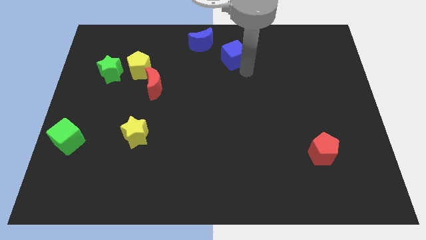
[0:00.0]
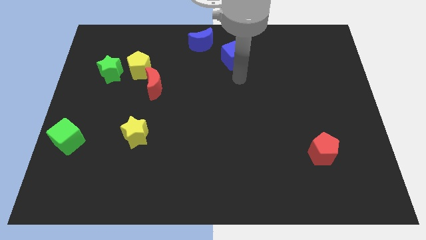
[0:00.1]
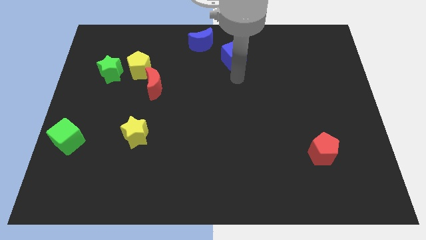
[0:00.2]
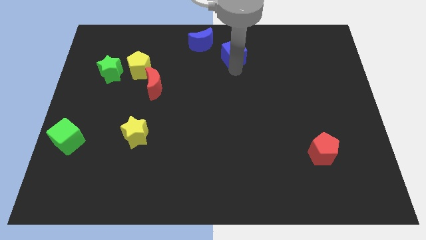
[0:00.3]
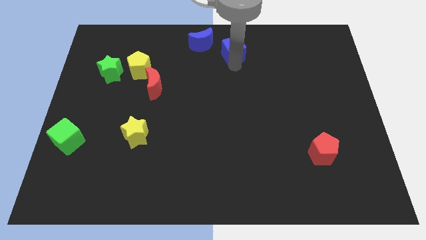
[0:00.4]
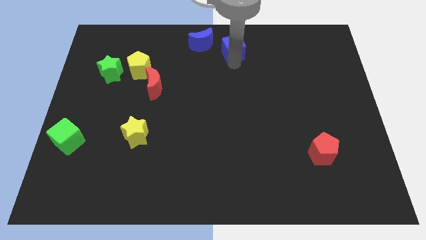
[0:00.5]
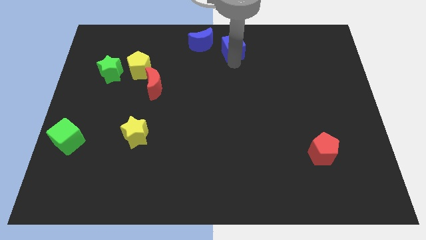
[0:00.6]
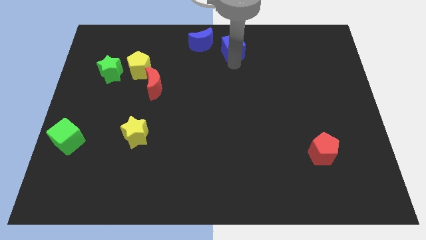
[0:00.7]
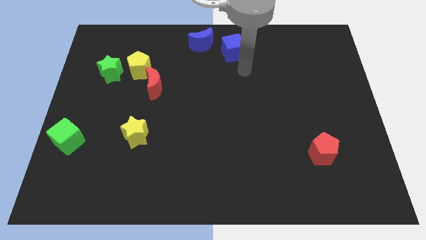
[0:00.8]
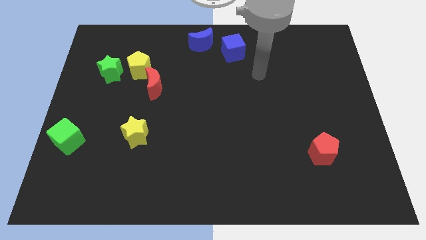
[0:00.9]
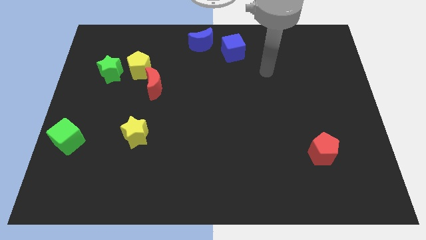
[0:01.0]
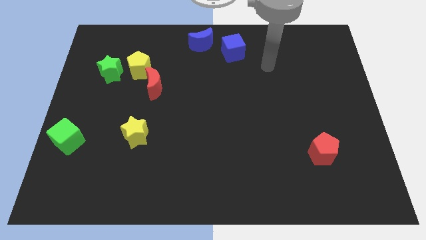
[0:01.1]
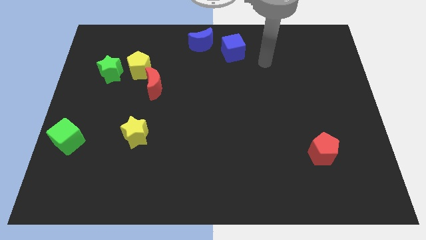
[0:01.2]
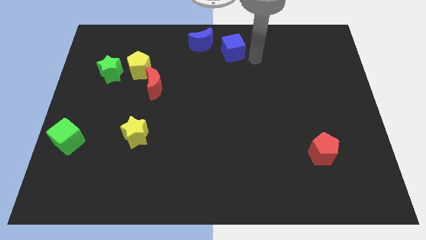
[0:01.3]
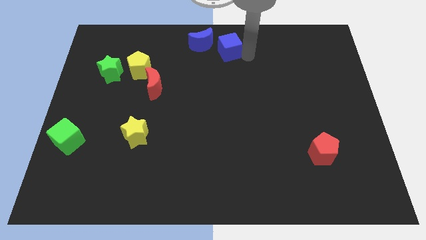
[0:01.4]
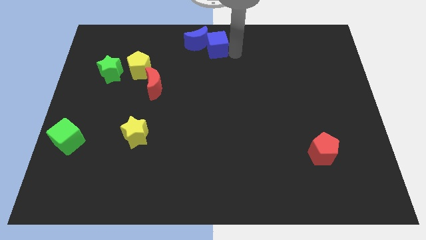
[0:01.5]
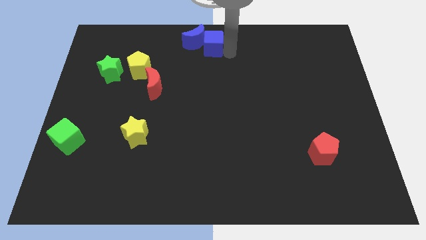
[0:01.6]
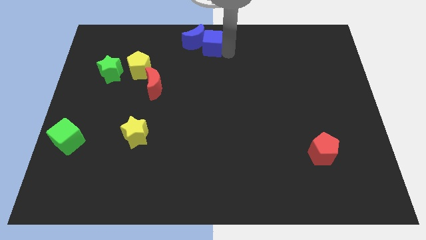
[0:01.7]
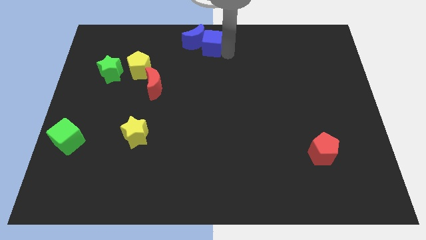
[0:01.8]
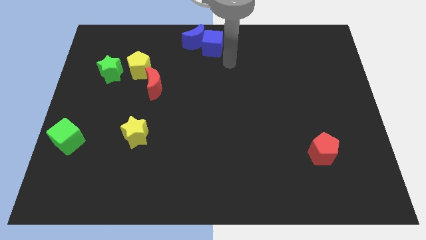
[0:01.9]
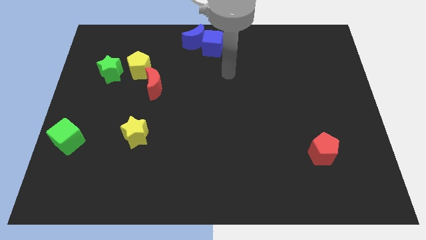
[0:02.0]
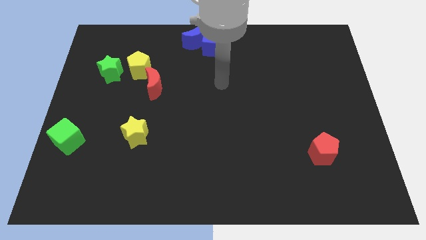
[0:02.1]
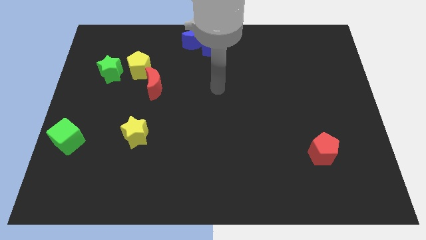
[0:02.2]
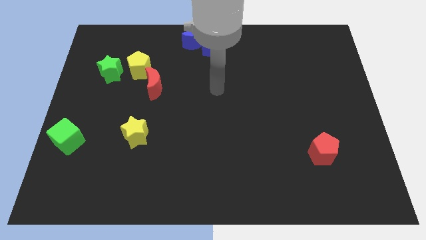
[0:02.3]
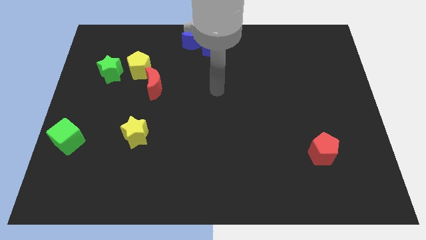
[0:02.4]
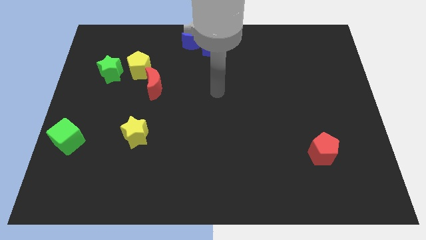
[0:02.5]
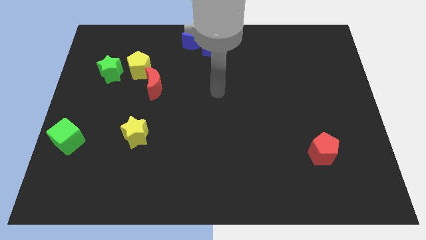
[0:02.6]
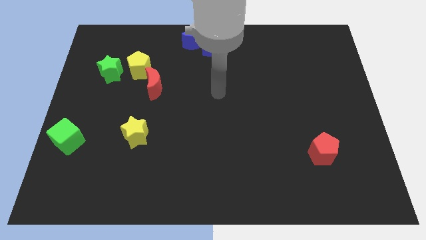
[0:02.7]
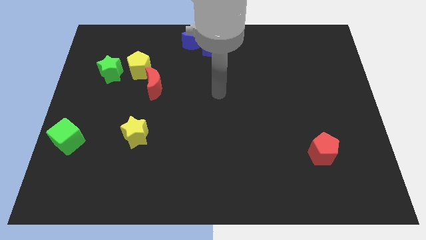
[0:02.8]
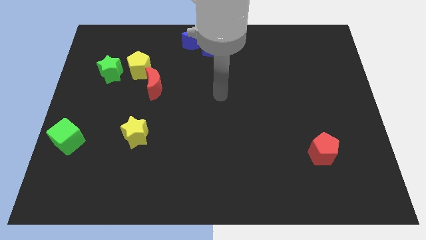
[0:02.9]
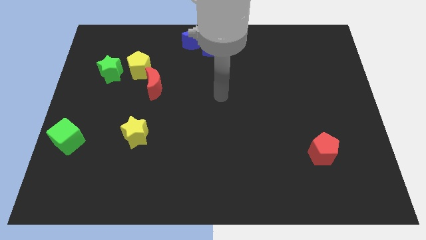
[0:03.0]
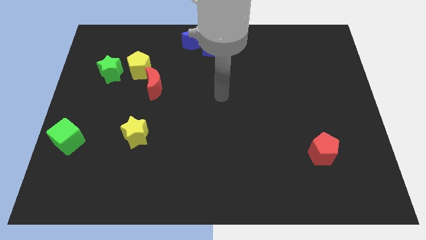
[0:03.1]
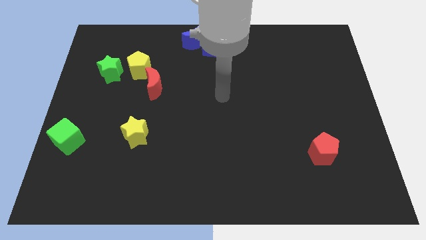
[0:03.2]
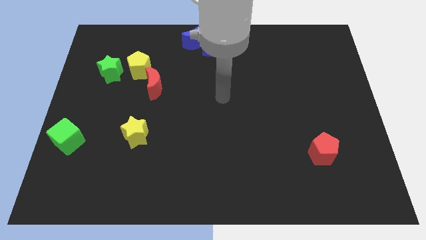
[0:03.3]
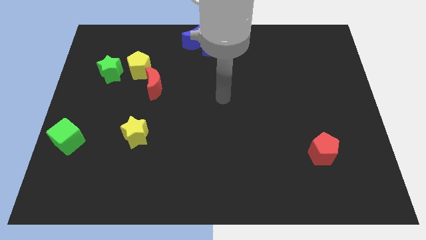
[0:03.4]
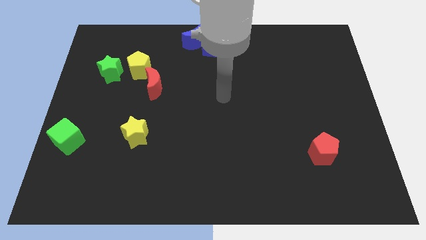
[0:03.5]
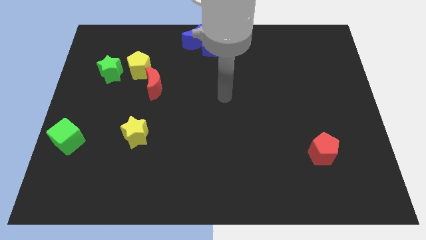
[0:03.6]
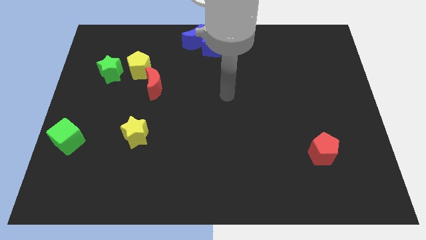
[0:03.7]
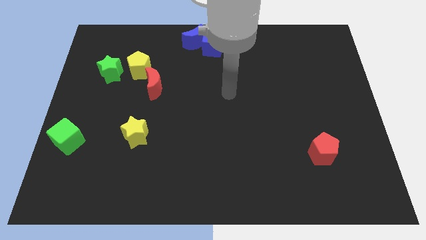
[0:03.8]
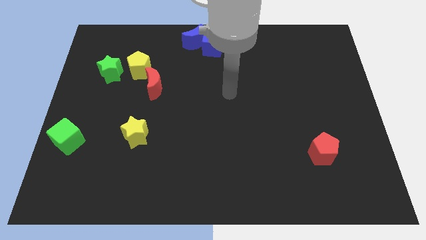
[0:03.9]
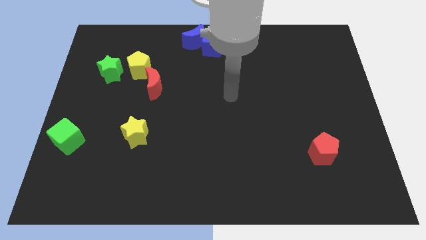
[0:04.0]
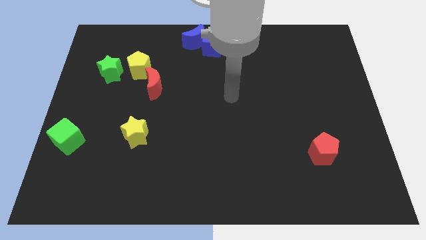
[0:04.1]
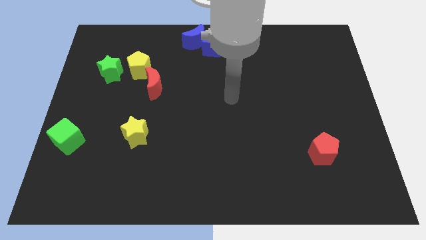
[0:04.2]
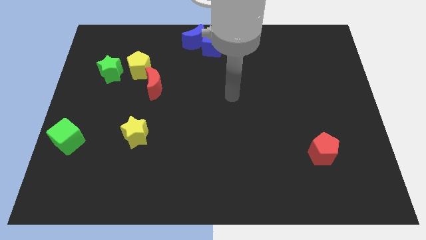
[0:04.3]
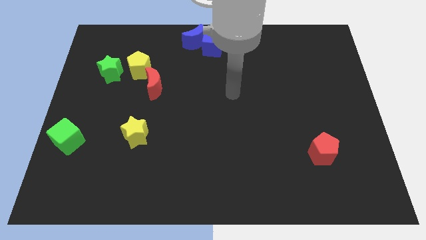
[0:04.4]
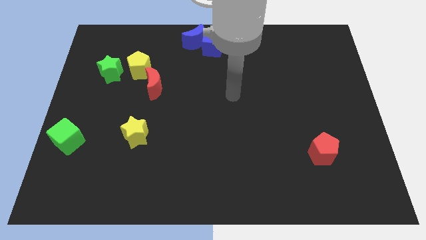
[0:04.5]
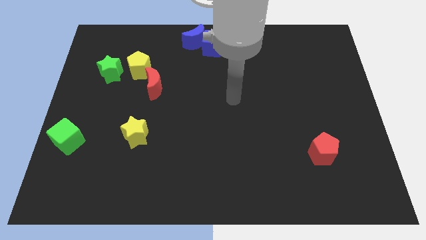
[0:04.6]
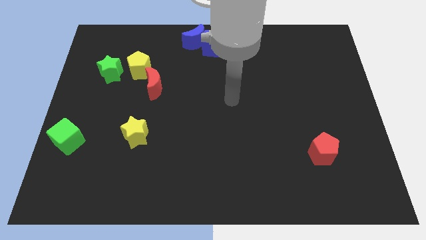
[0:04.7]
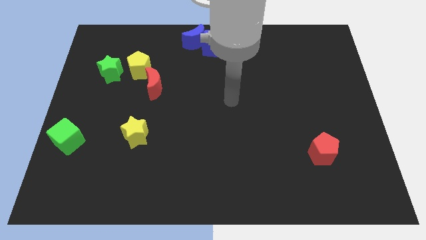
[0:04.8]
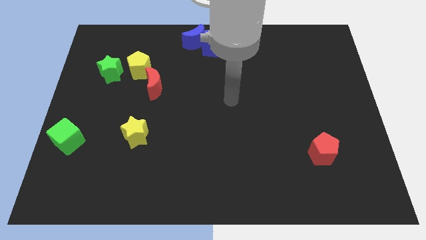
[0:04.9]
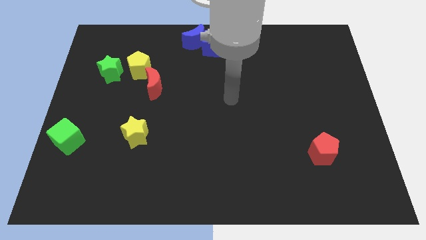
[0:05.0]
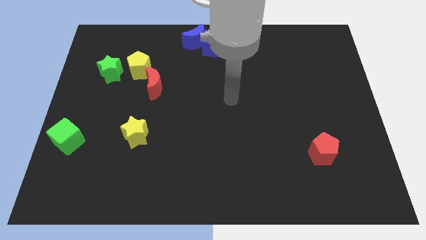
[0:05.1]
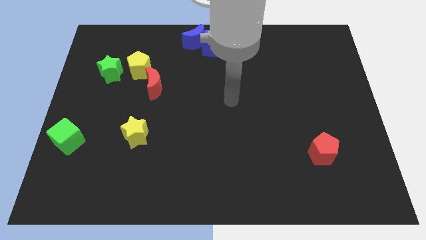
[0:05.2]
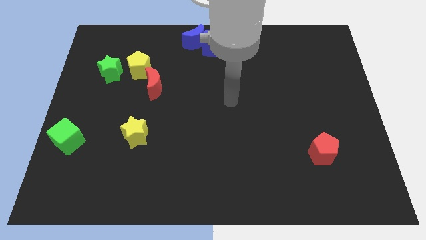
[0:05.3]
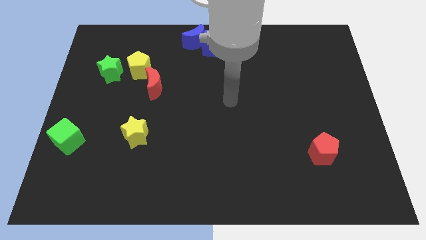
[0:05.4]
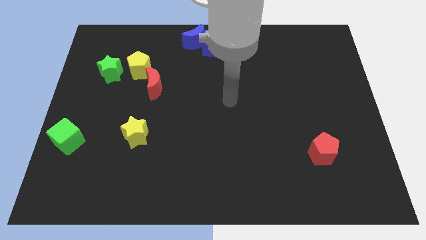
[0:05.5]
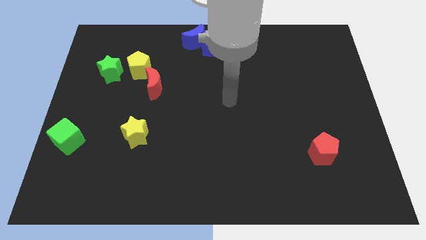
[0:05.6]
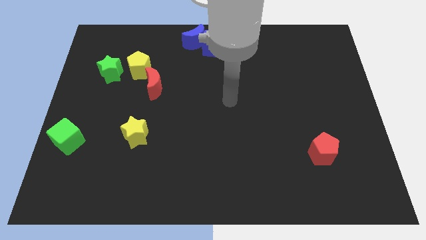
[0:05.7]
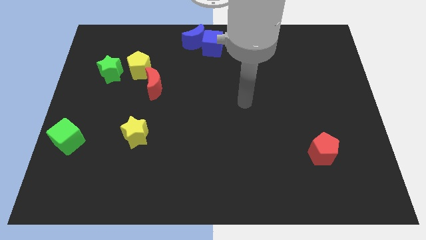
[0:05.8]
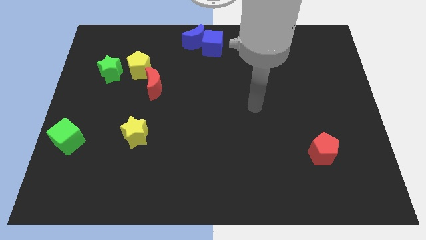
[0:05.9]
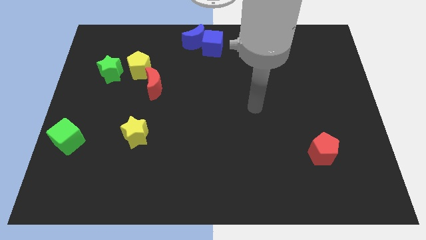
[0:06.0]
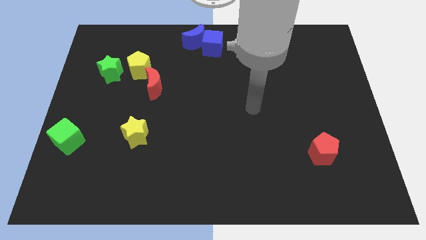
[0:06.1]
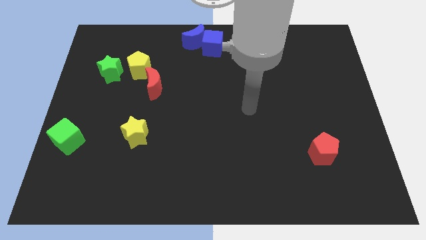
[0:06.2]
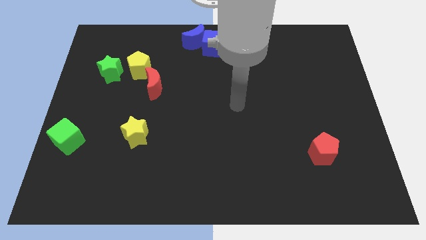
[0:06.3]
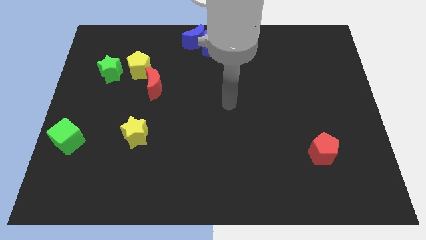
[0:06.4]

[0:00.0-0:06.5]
place blue cube to the top center of the board

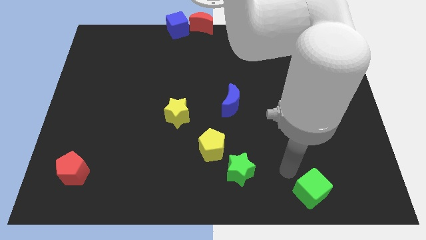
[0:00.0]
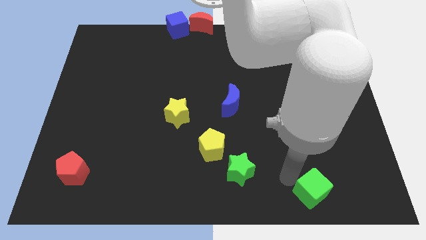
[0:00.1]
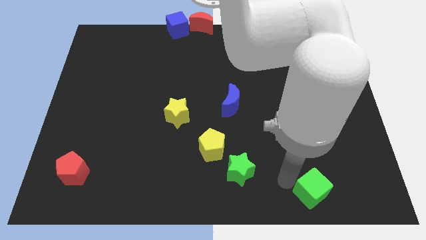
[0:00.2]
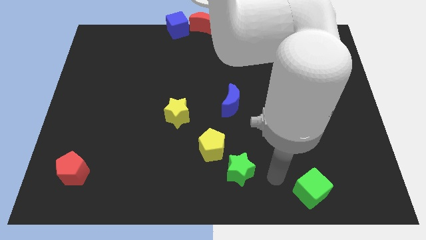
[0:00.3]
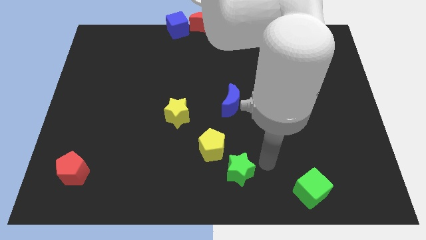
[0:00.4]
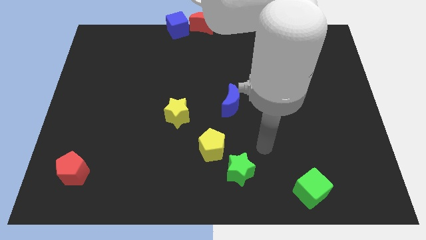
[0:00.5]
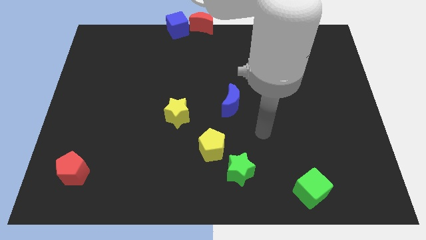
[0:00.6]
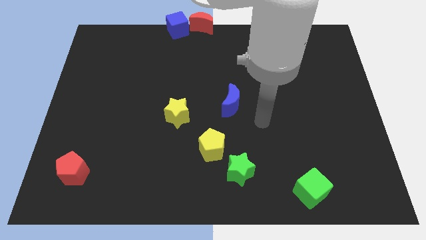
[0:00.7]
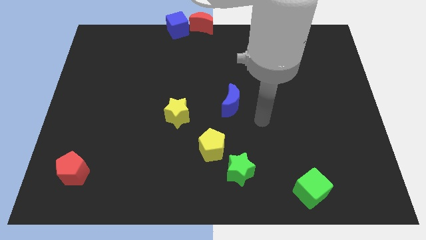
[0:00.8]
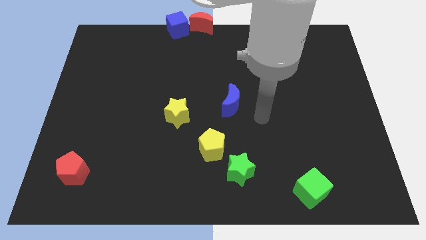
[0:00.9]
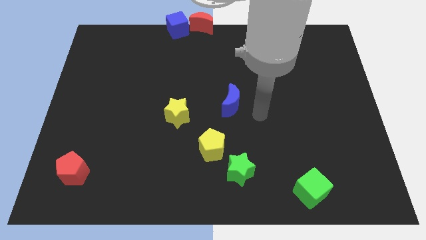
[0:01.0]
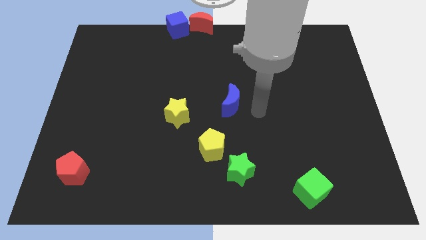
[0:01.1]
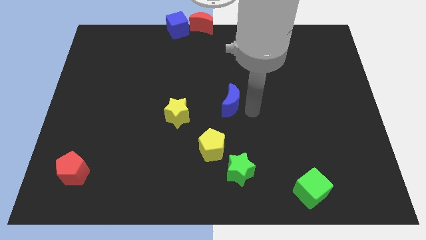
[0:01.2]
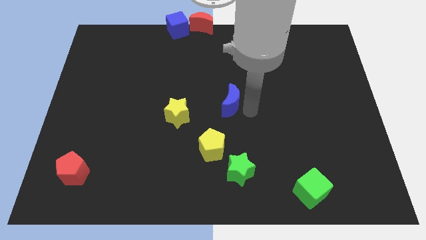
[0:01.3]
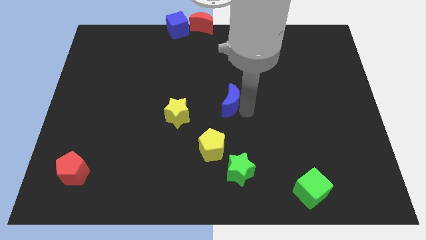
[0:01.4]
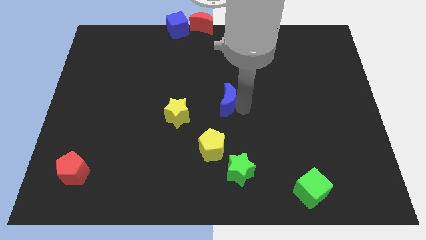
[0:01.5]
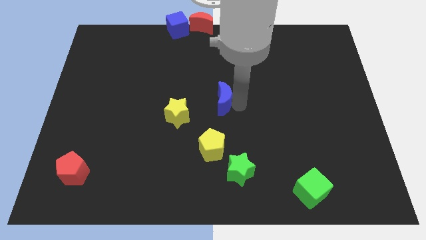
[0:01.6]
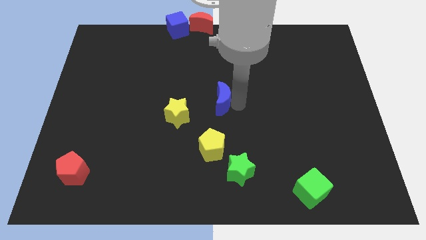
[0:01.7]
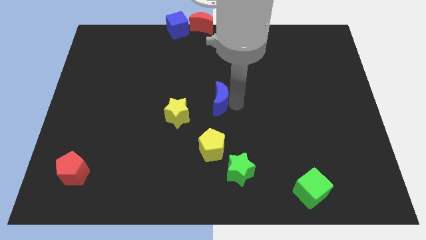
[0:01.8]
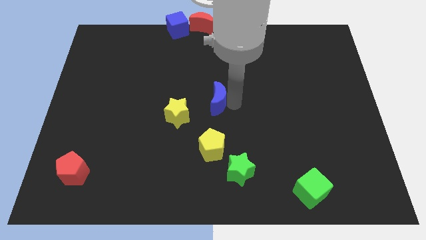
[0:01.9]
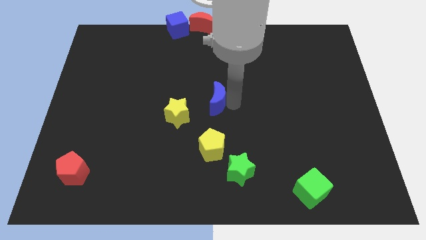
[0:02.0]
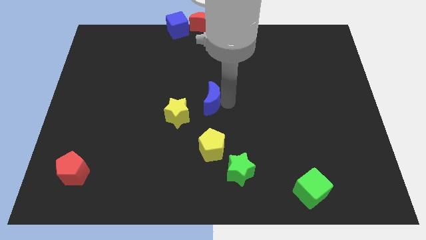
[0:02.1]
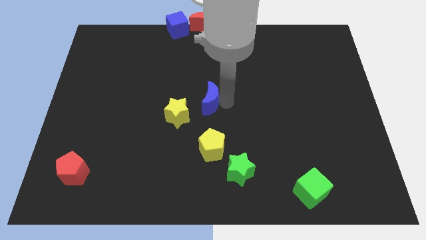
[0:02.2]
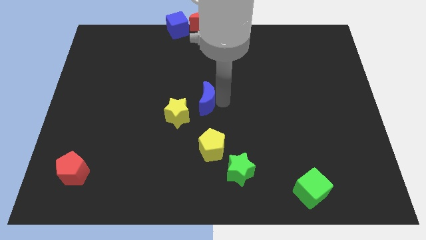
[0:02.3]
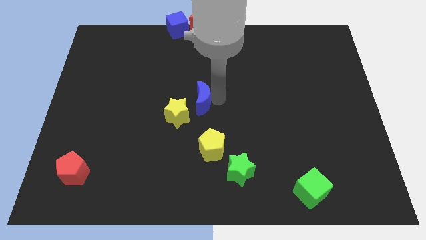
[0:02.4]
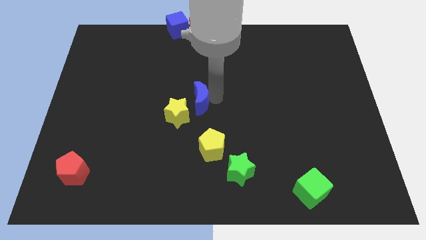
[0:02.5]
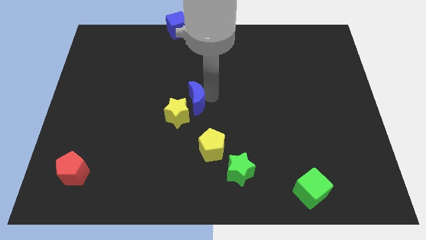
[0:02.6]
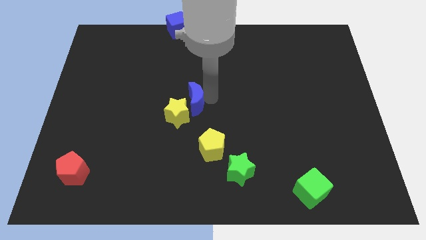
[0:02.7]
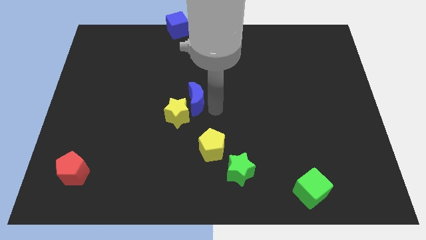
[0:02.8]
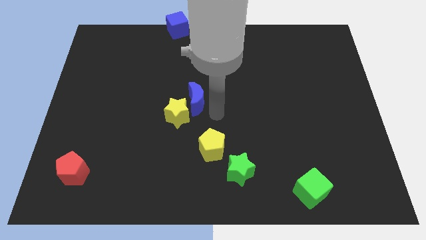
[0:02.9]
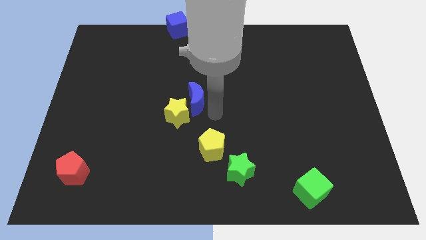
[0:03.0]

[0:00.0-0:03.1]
push the blue crescent into the yellow star
